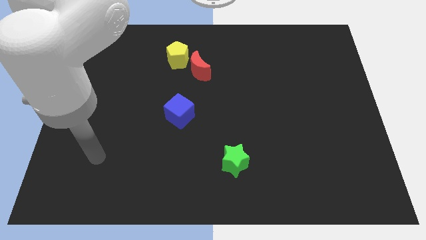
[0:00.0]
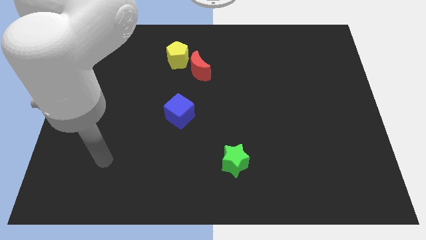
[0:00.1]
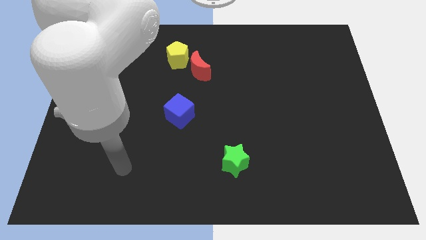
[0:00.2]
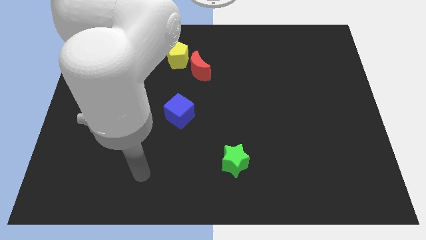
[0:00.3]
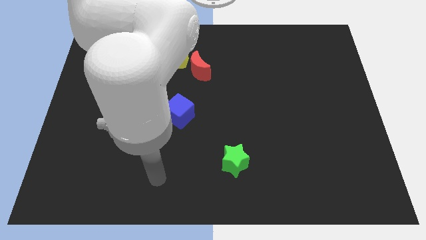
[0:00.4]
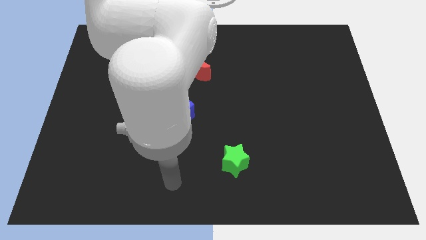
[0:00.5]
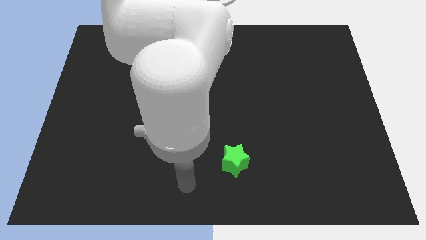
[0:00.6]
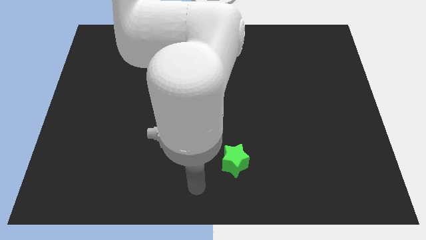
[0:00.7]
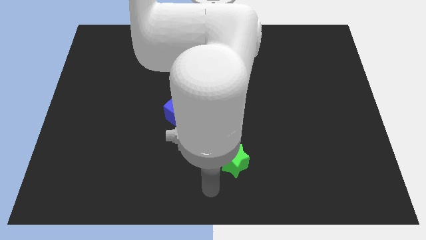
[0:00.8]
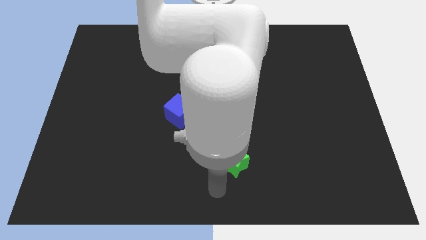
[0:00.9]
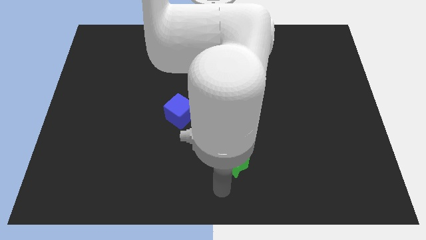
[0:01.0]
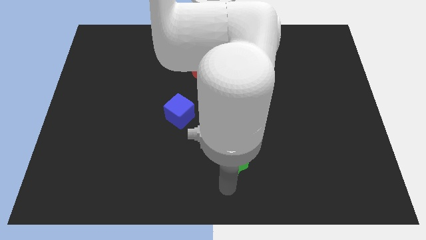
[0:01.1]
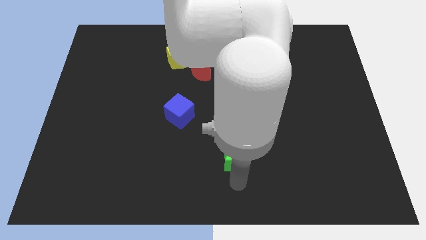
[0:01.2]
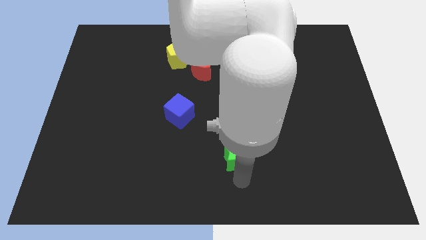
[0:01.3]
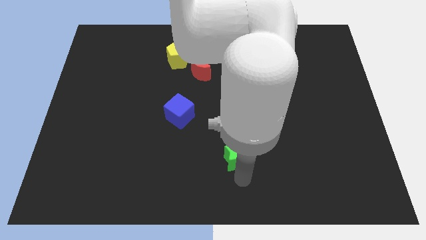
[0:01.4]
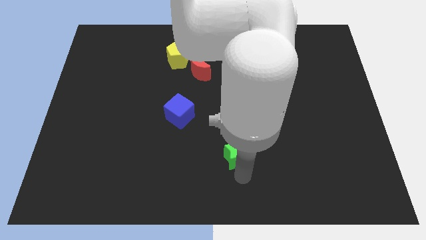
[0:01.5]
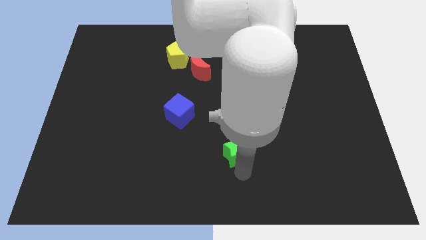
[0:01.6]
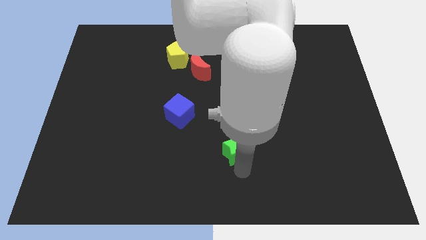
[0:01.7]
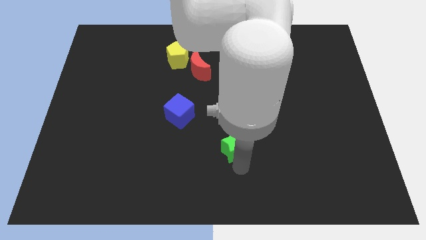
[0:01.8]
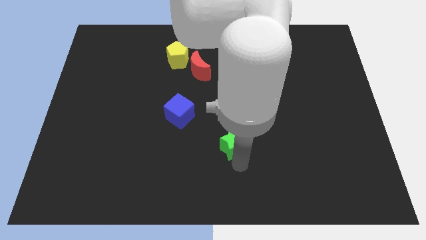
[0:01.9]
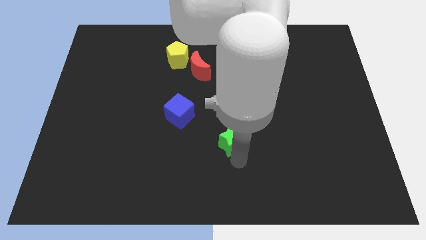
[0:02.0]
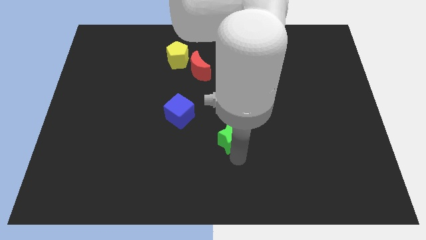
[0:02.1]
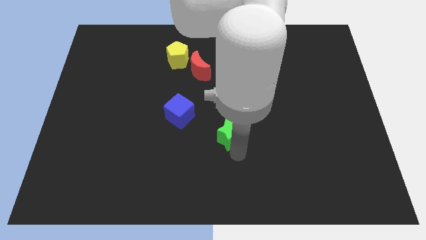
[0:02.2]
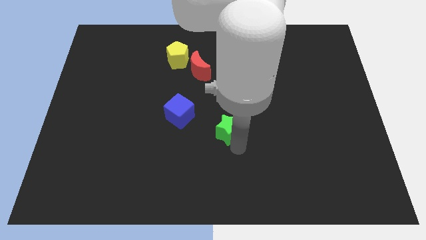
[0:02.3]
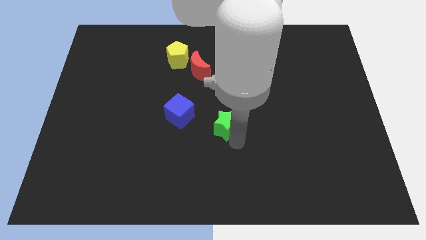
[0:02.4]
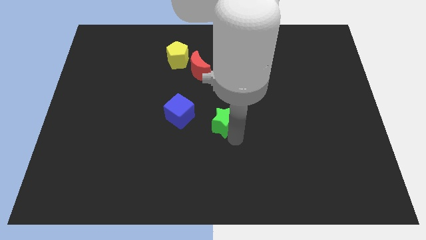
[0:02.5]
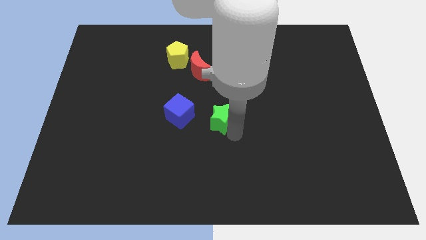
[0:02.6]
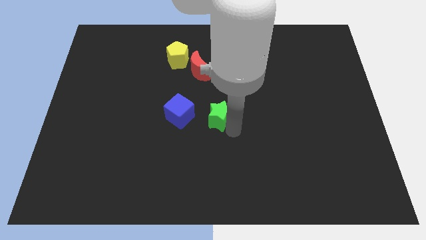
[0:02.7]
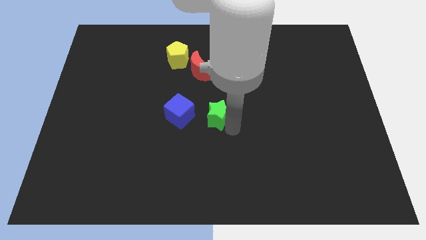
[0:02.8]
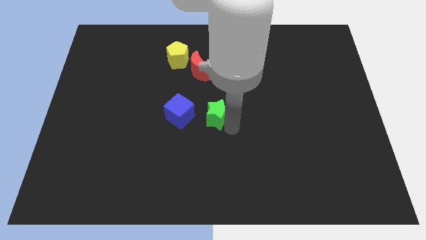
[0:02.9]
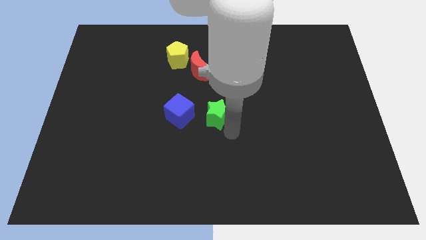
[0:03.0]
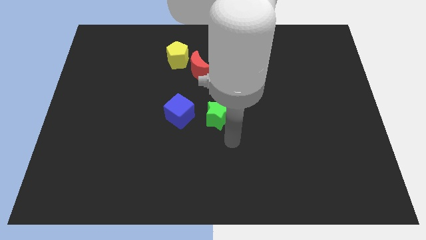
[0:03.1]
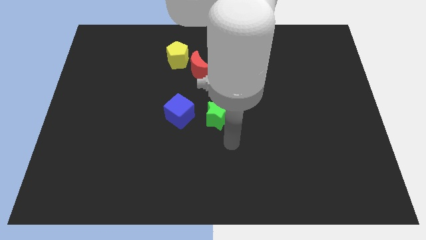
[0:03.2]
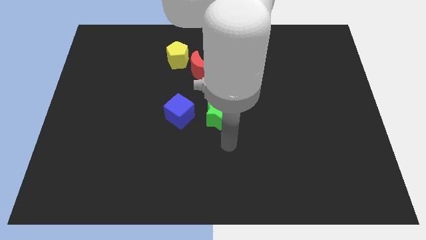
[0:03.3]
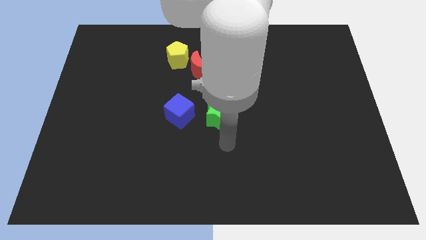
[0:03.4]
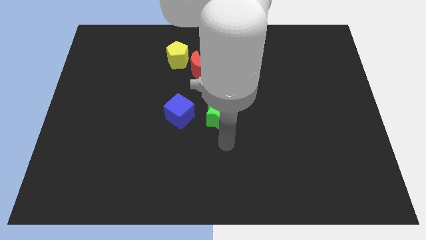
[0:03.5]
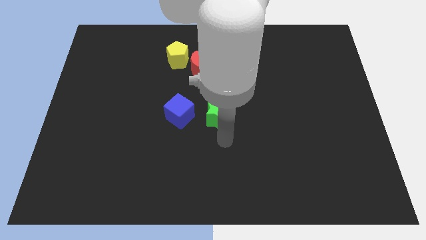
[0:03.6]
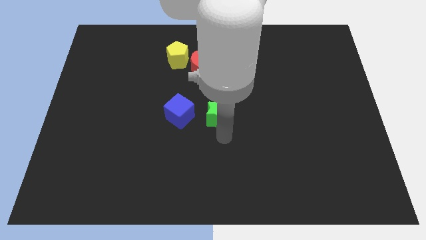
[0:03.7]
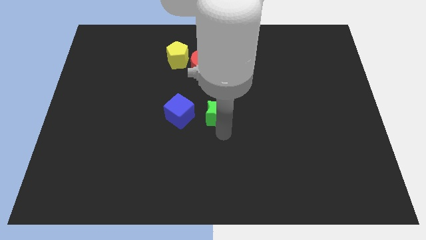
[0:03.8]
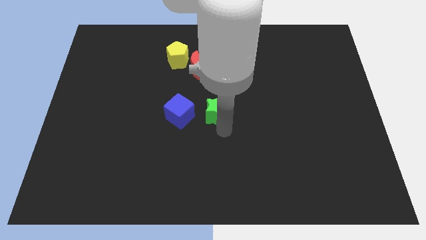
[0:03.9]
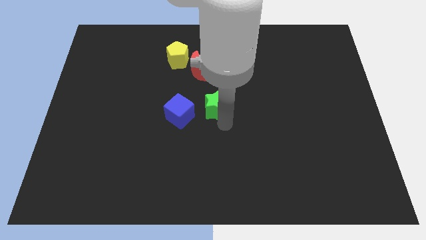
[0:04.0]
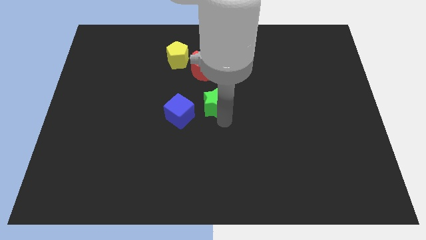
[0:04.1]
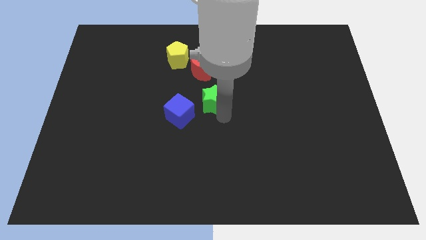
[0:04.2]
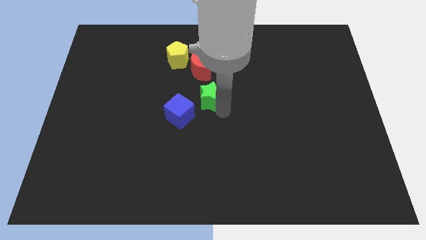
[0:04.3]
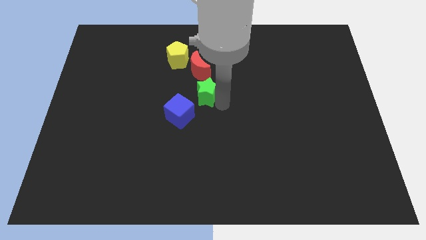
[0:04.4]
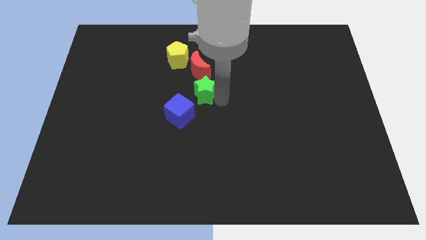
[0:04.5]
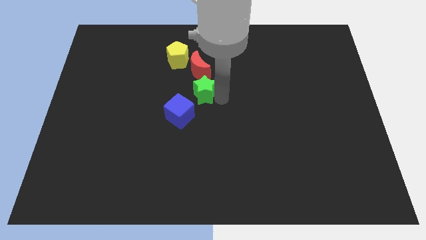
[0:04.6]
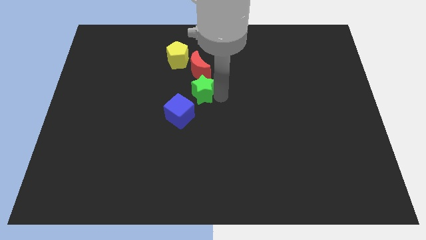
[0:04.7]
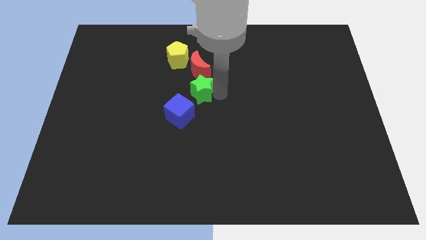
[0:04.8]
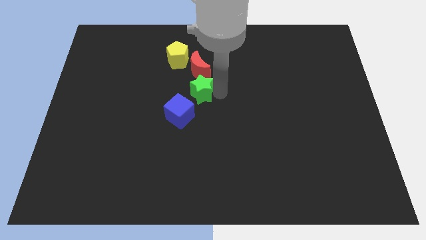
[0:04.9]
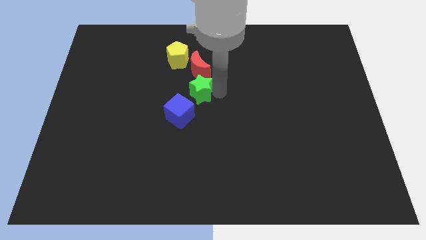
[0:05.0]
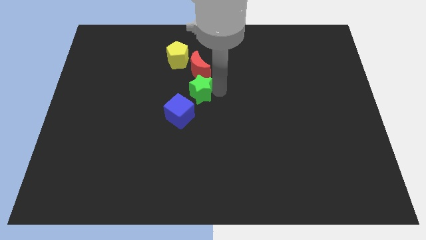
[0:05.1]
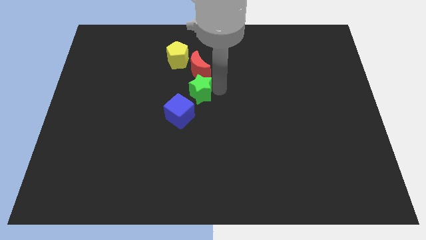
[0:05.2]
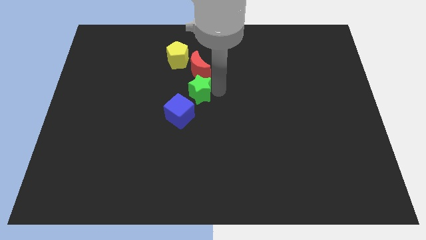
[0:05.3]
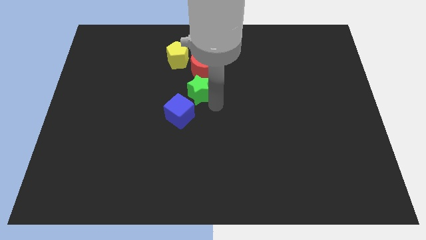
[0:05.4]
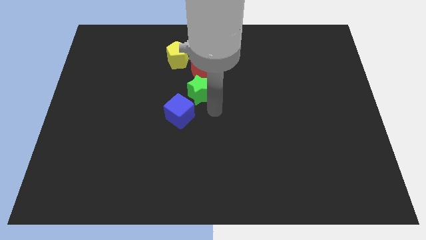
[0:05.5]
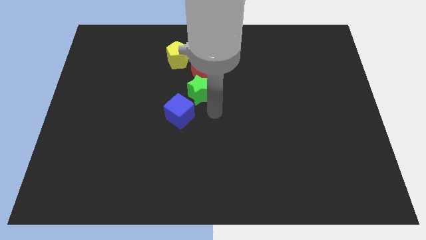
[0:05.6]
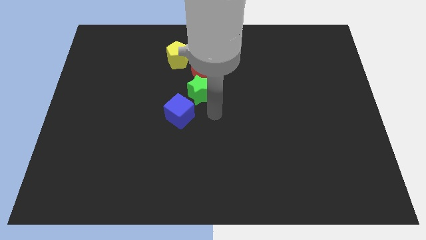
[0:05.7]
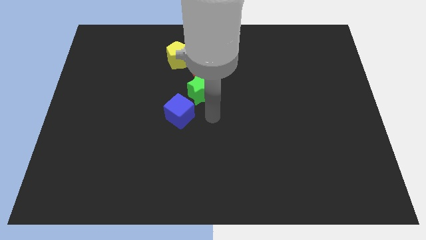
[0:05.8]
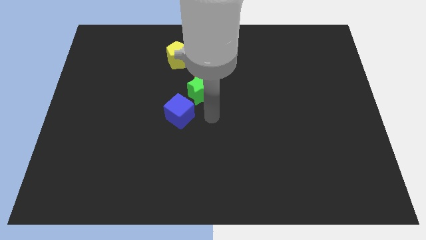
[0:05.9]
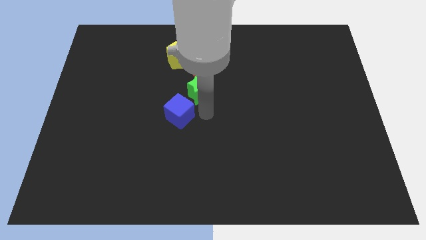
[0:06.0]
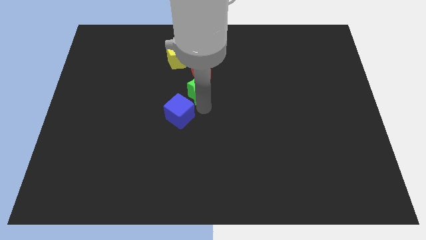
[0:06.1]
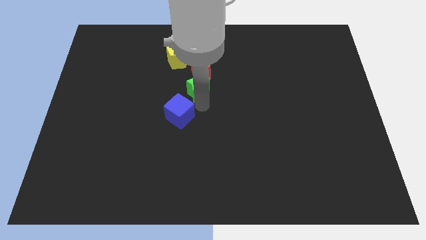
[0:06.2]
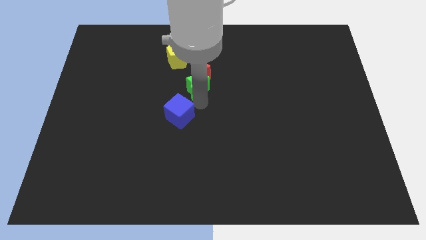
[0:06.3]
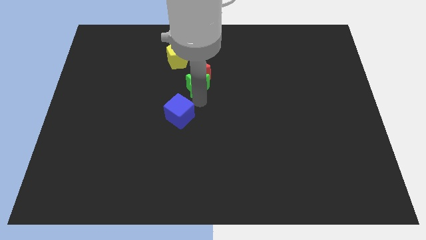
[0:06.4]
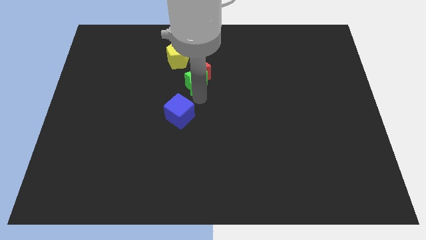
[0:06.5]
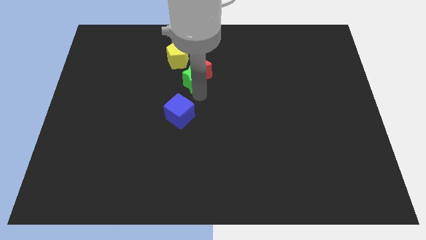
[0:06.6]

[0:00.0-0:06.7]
push the green star next to the red moon

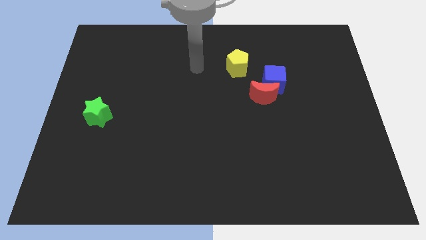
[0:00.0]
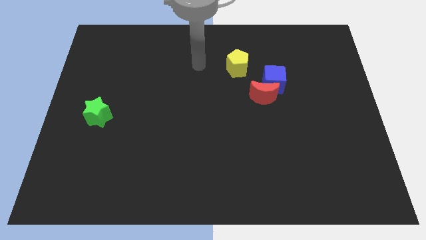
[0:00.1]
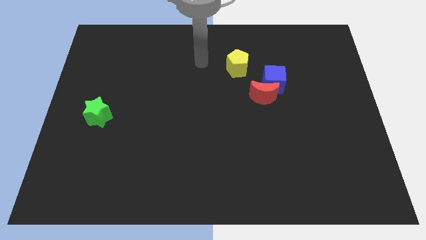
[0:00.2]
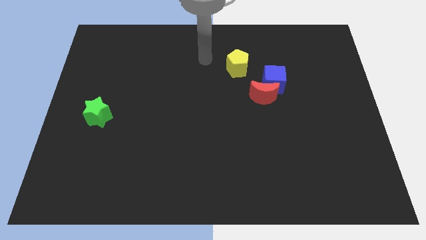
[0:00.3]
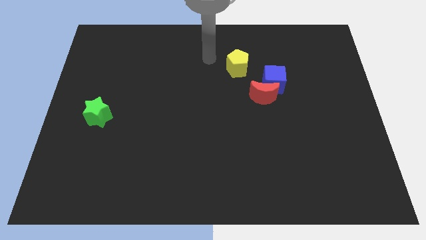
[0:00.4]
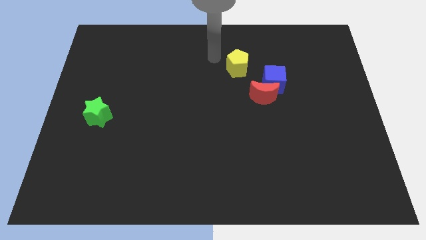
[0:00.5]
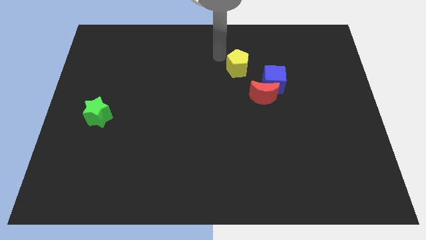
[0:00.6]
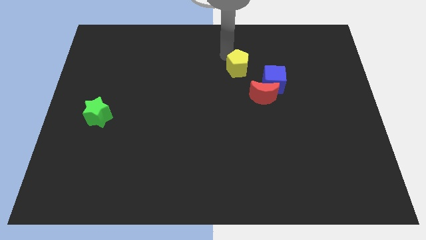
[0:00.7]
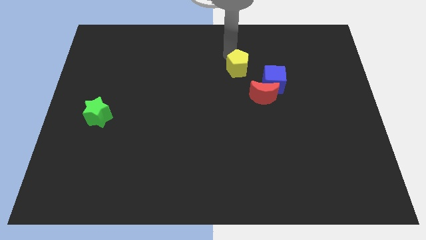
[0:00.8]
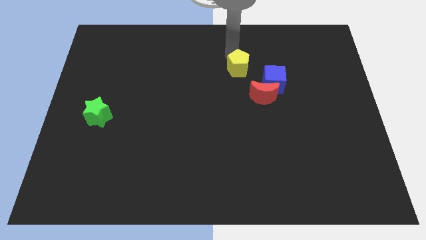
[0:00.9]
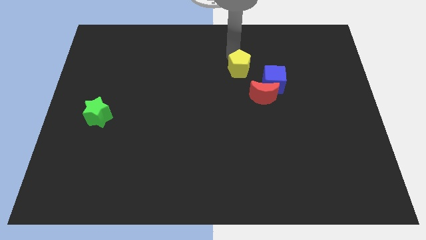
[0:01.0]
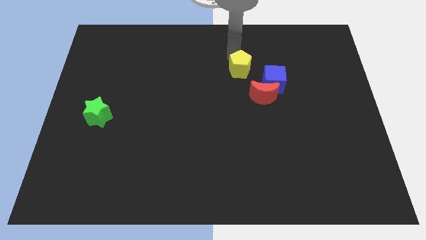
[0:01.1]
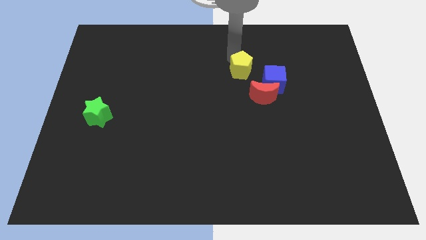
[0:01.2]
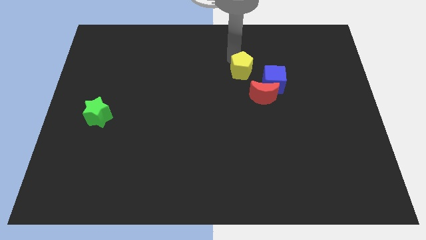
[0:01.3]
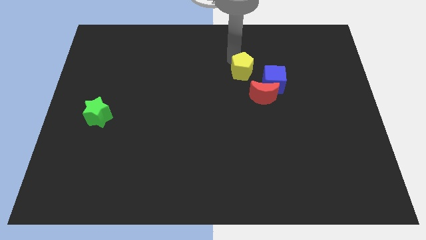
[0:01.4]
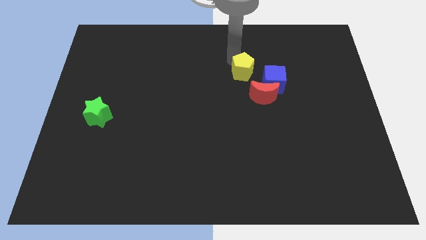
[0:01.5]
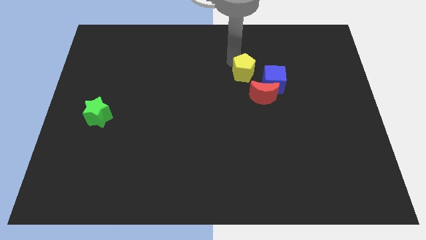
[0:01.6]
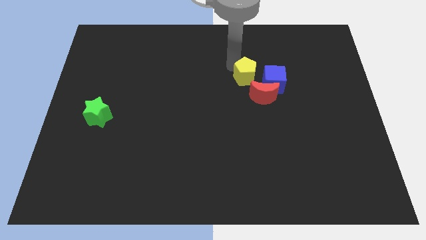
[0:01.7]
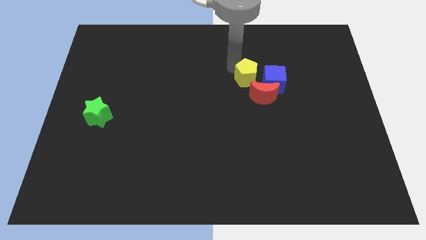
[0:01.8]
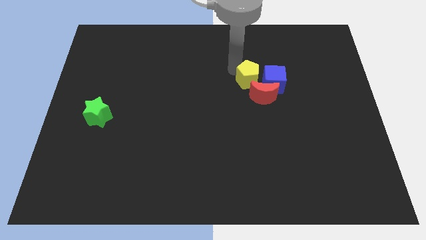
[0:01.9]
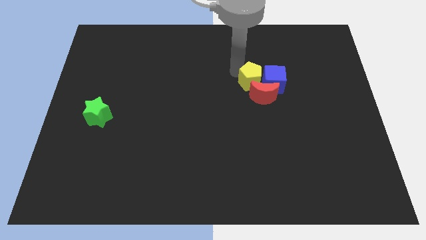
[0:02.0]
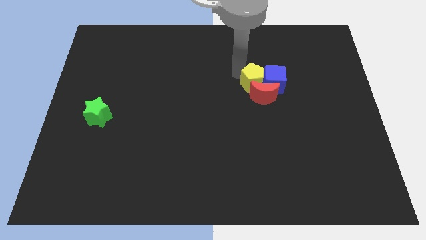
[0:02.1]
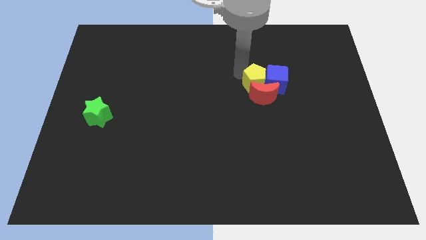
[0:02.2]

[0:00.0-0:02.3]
slide the pentagon towards the cube
